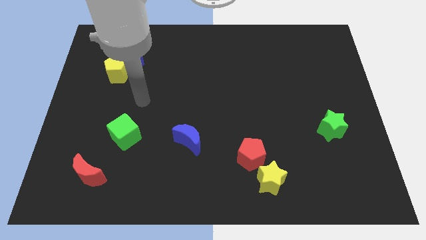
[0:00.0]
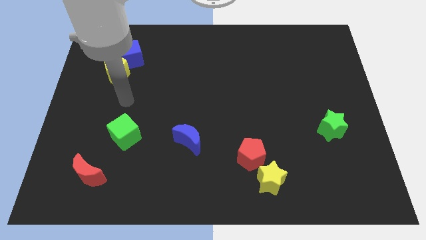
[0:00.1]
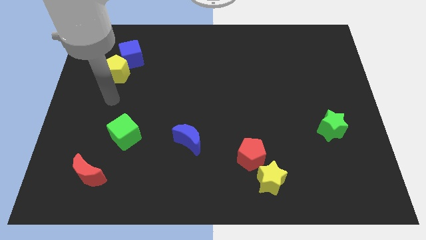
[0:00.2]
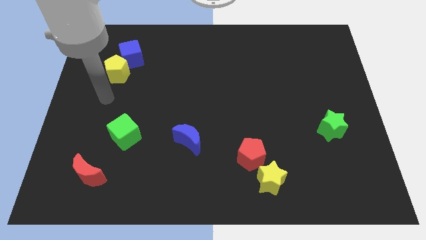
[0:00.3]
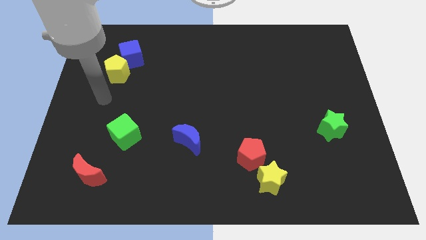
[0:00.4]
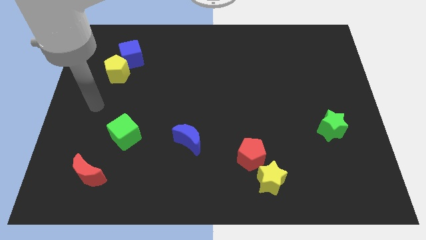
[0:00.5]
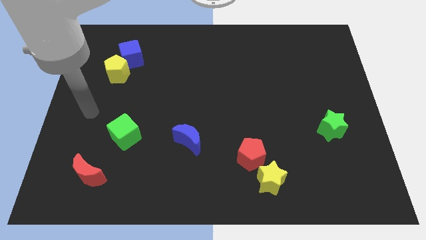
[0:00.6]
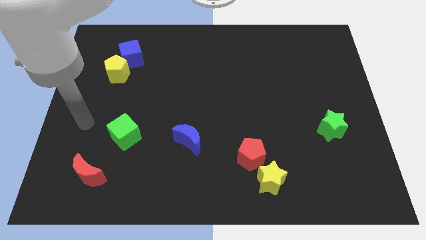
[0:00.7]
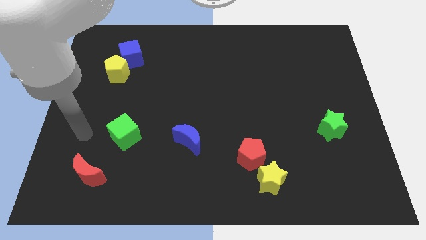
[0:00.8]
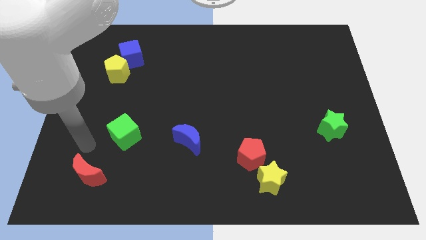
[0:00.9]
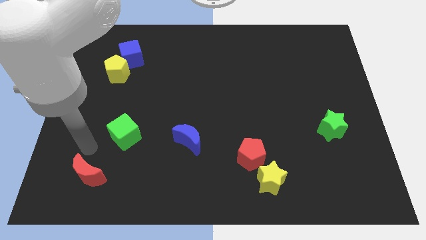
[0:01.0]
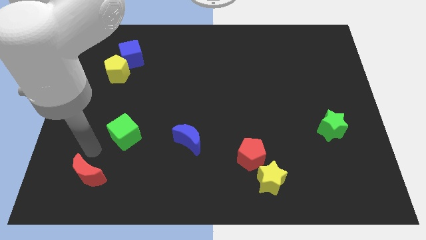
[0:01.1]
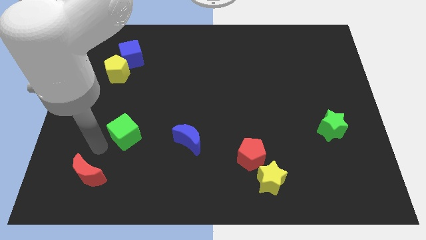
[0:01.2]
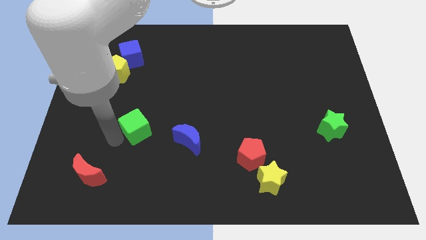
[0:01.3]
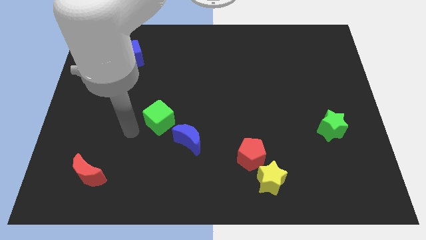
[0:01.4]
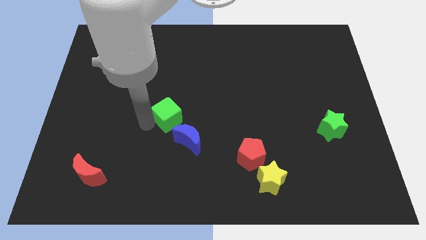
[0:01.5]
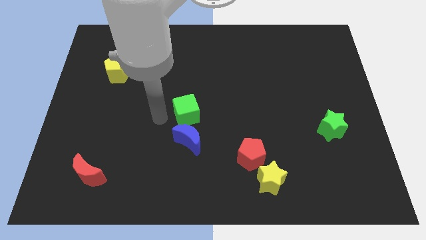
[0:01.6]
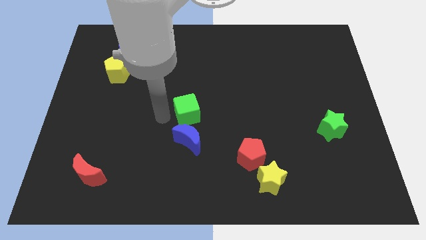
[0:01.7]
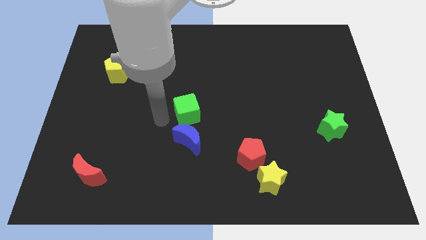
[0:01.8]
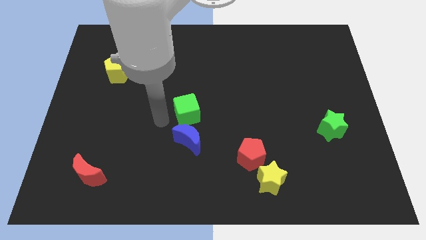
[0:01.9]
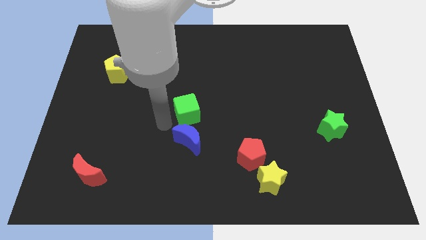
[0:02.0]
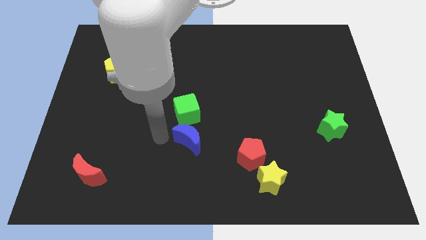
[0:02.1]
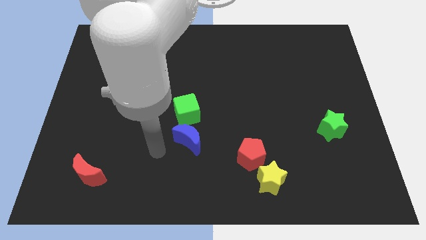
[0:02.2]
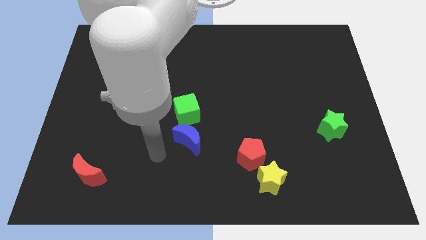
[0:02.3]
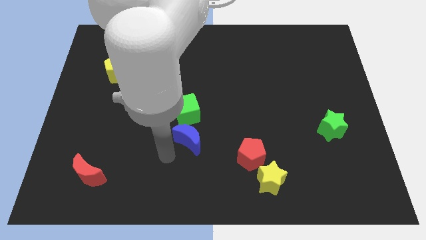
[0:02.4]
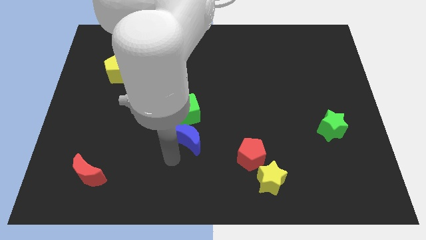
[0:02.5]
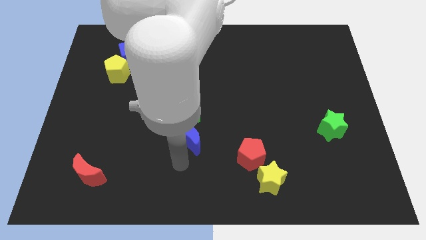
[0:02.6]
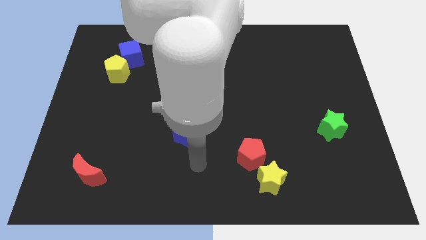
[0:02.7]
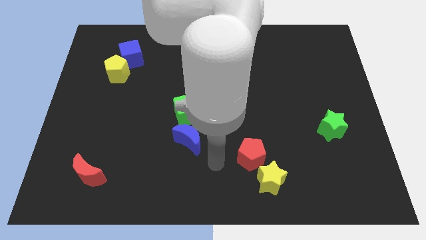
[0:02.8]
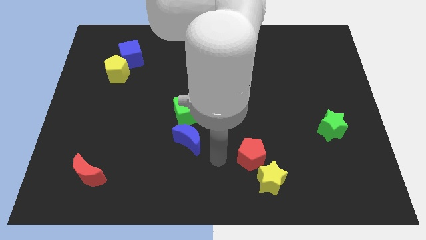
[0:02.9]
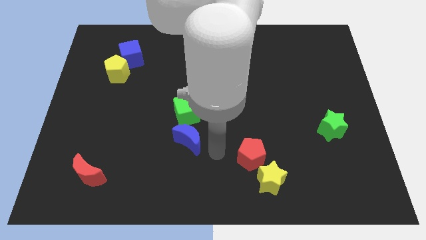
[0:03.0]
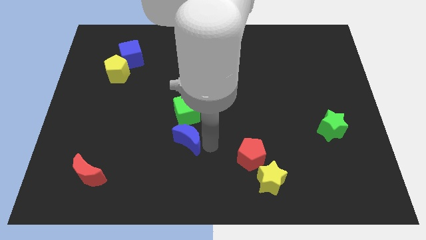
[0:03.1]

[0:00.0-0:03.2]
place green cube above the blue moon

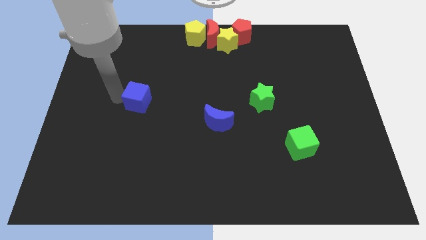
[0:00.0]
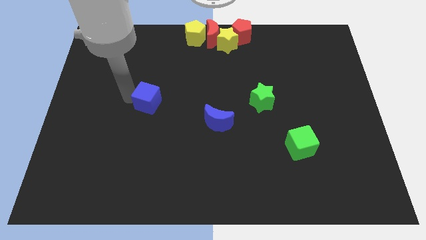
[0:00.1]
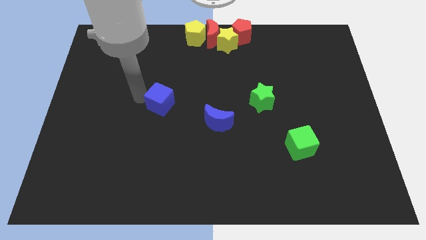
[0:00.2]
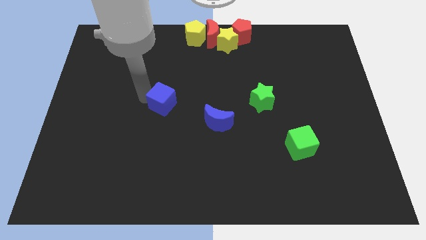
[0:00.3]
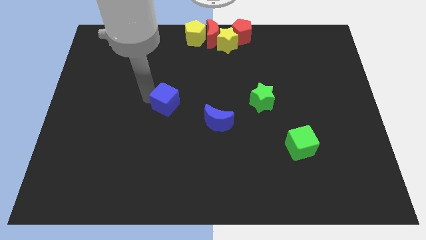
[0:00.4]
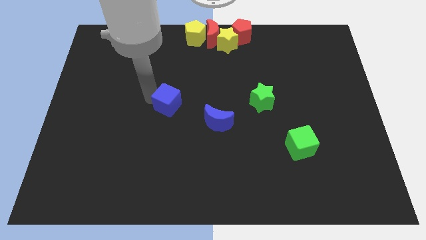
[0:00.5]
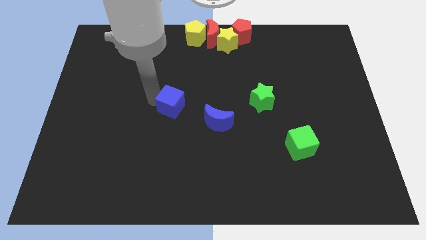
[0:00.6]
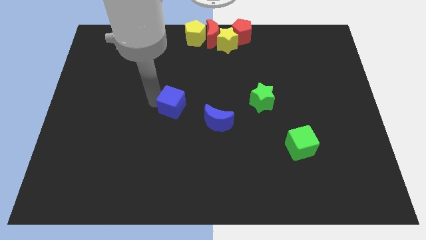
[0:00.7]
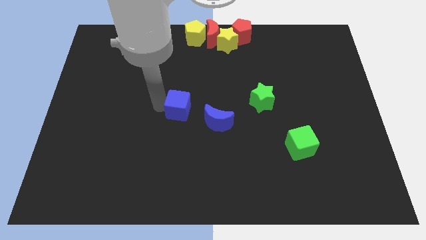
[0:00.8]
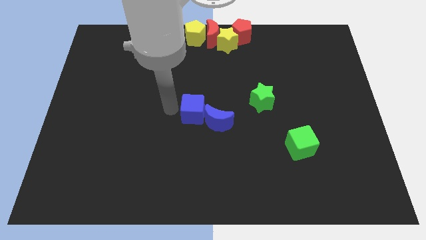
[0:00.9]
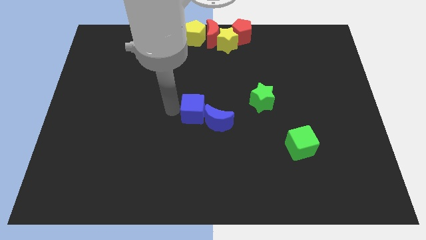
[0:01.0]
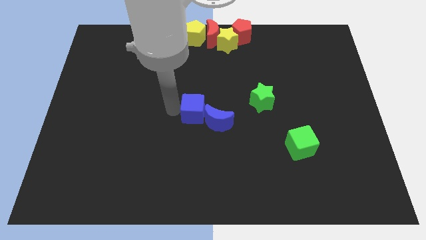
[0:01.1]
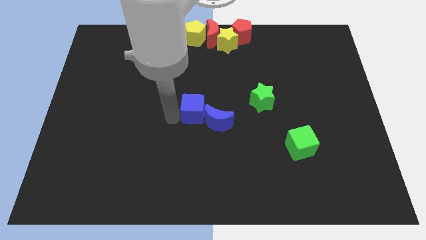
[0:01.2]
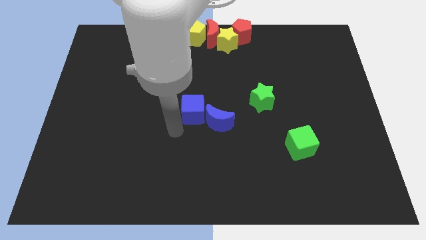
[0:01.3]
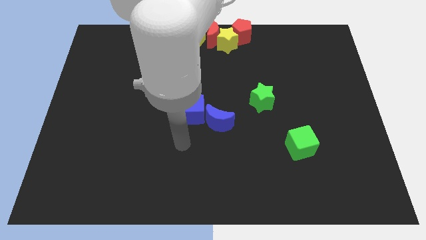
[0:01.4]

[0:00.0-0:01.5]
move the blue cube to the left of the blue crescent

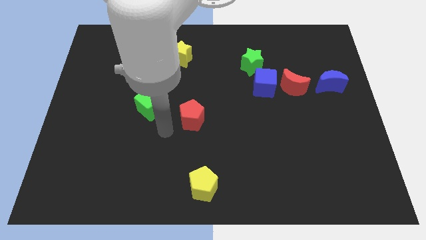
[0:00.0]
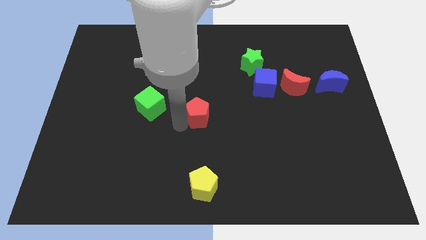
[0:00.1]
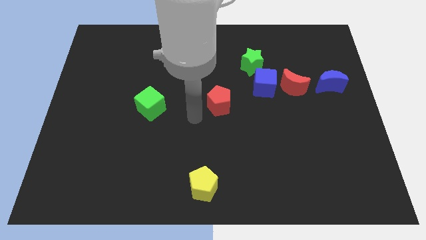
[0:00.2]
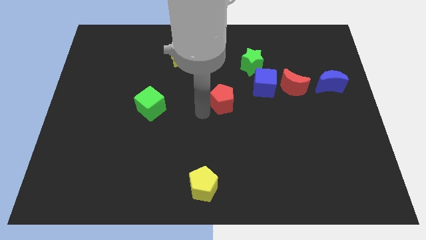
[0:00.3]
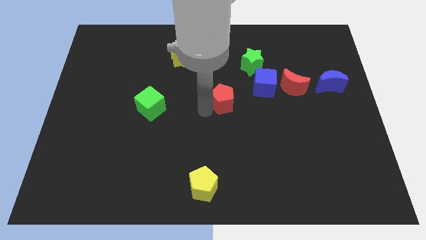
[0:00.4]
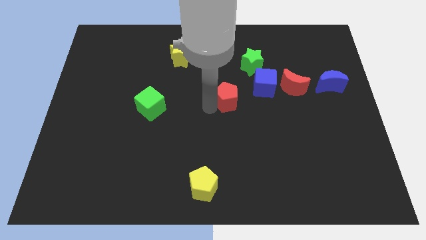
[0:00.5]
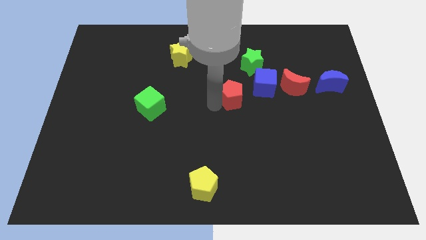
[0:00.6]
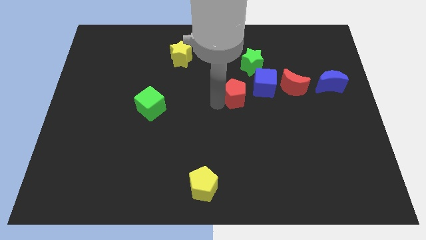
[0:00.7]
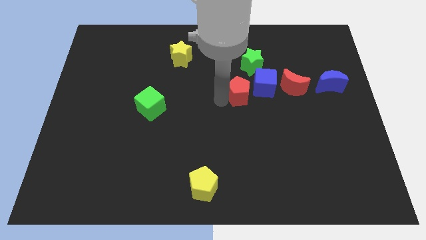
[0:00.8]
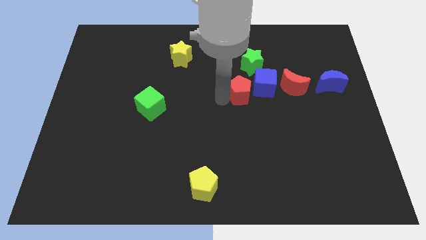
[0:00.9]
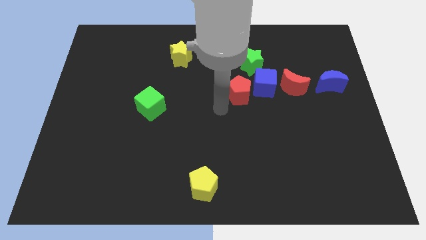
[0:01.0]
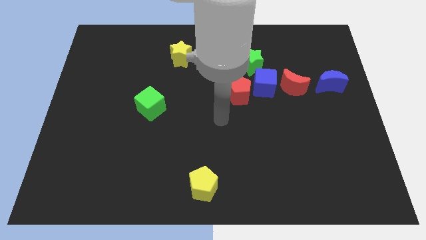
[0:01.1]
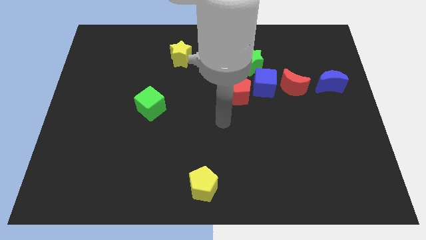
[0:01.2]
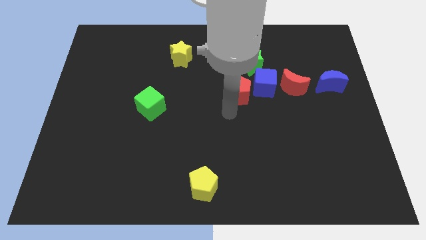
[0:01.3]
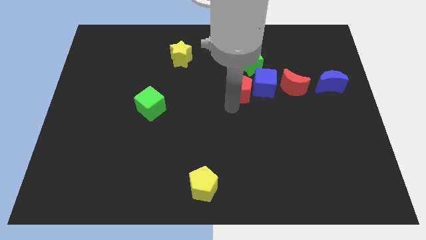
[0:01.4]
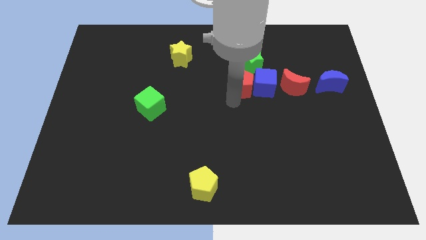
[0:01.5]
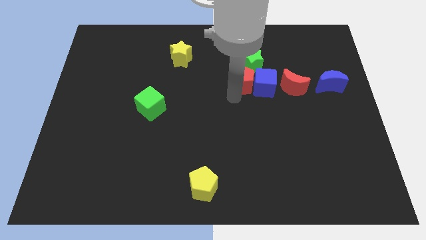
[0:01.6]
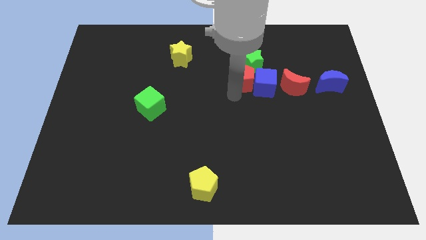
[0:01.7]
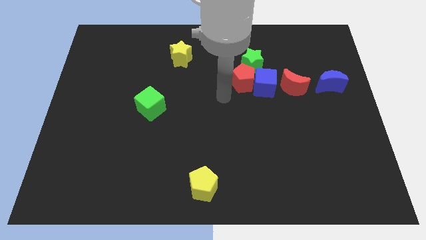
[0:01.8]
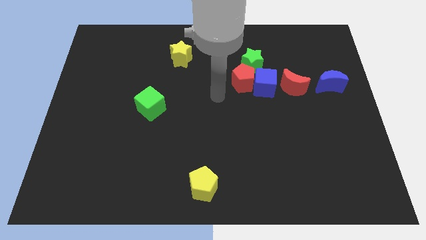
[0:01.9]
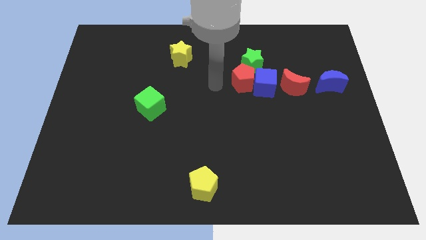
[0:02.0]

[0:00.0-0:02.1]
place the red pentagon close to green star

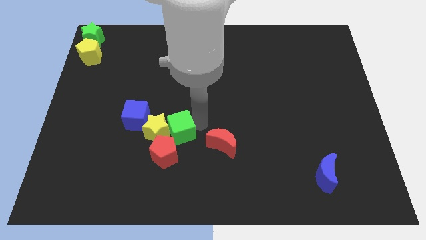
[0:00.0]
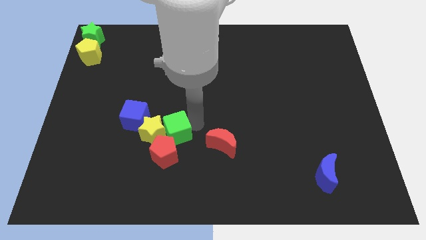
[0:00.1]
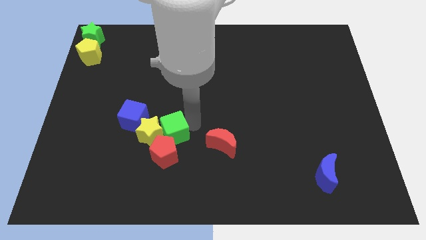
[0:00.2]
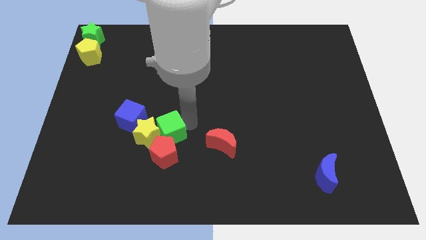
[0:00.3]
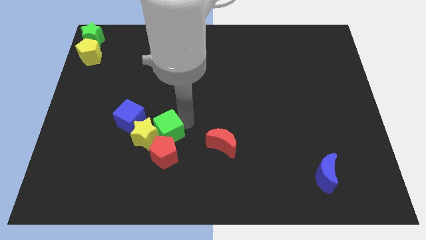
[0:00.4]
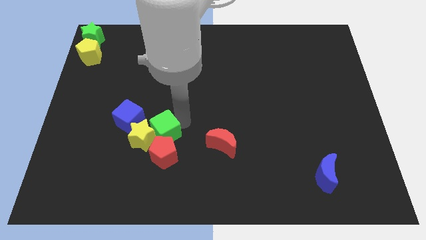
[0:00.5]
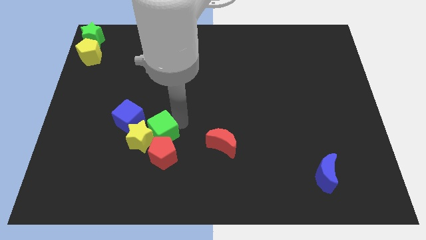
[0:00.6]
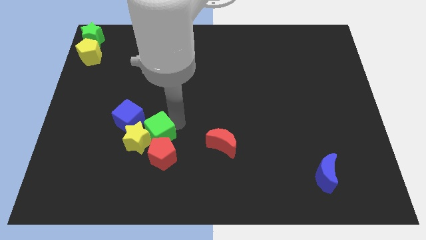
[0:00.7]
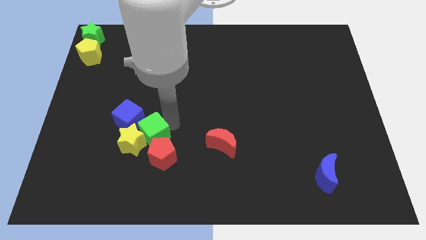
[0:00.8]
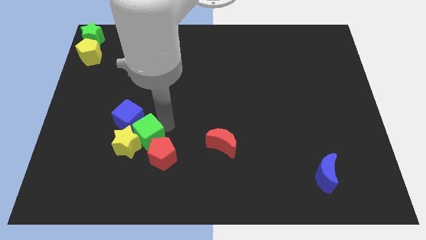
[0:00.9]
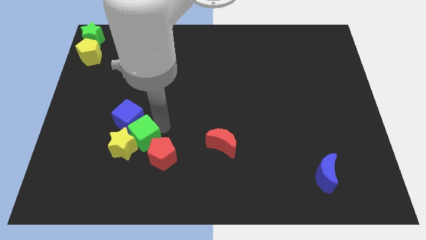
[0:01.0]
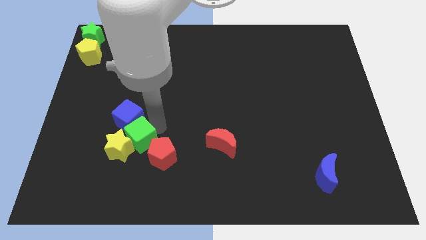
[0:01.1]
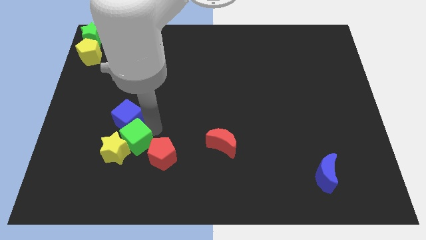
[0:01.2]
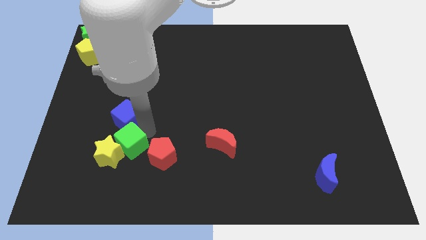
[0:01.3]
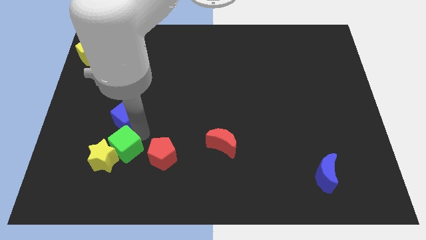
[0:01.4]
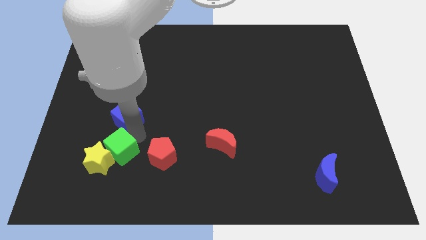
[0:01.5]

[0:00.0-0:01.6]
move green cube left of red pentagon

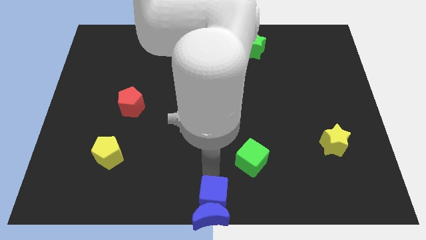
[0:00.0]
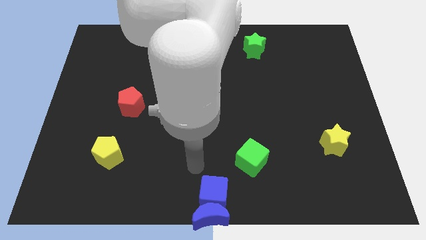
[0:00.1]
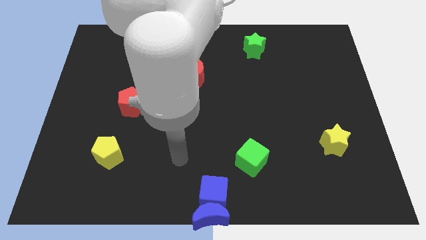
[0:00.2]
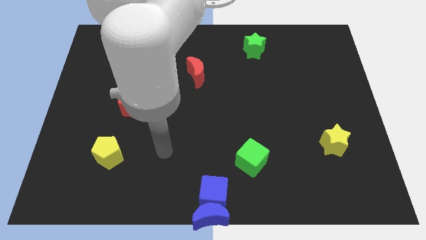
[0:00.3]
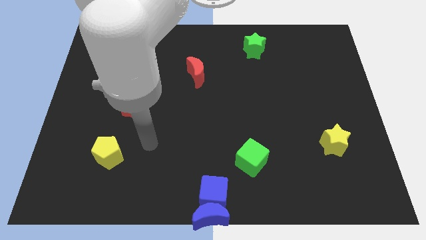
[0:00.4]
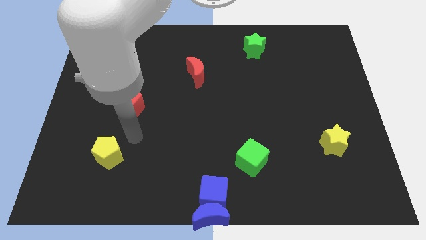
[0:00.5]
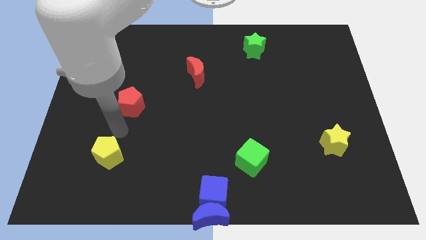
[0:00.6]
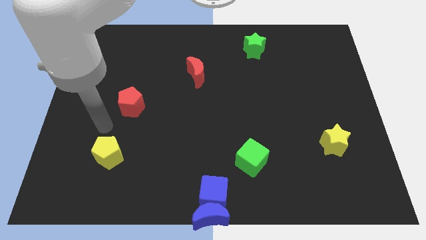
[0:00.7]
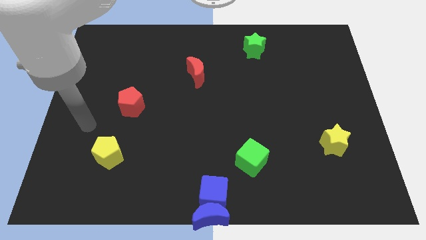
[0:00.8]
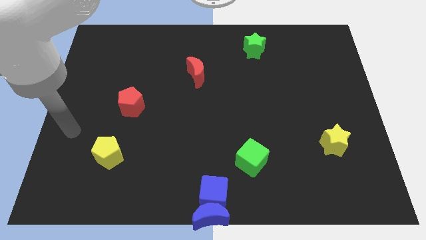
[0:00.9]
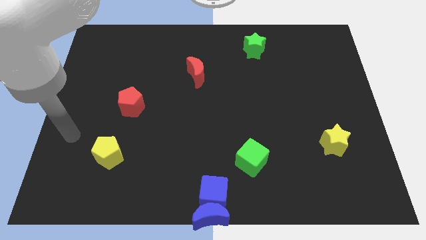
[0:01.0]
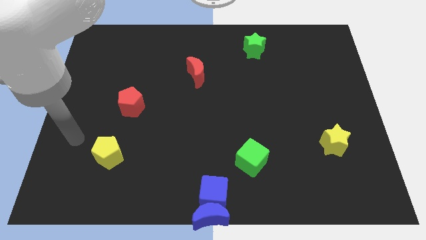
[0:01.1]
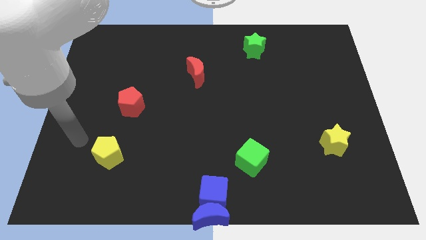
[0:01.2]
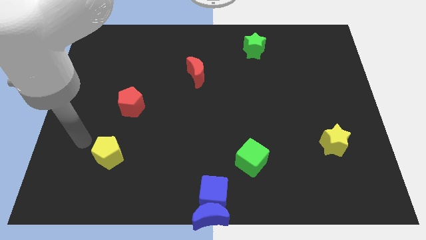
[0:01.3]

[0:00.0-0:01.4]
put your arm at the top left side of the yellow pentagon
